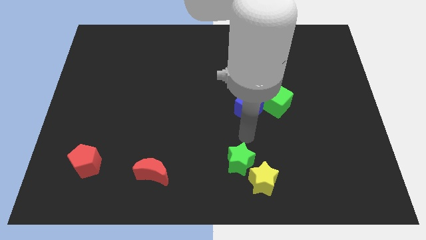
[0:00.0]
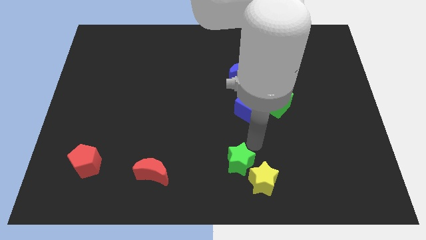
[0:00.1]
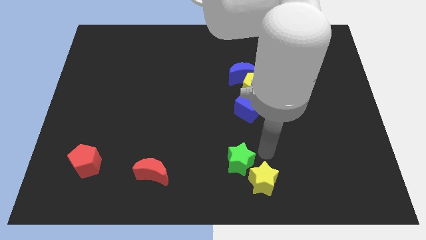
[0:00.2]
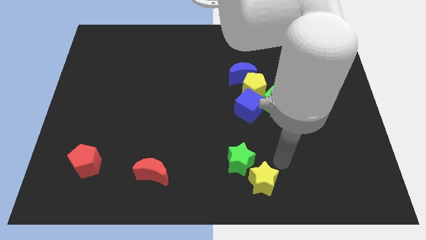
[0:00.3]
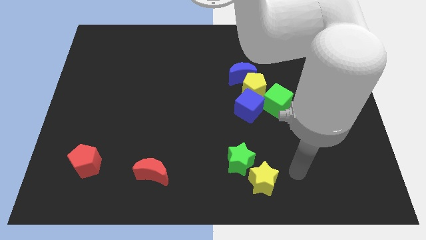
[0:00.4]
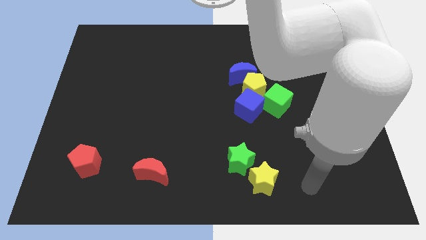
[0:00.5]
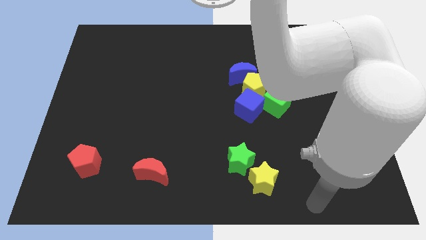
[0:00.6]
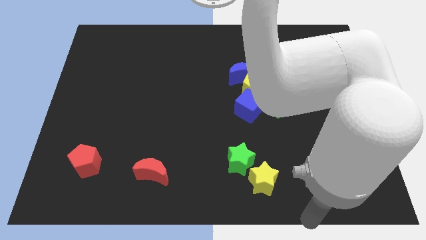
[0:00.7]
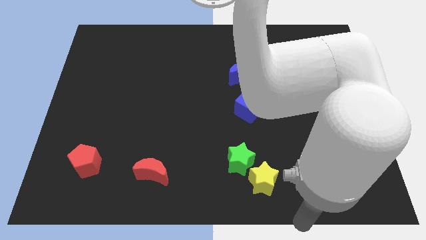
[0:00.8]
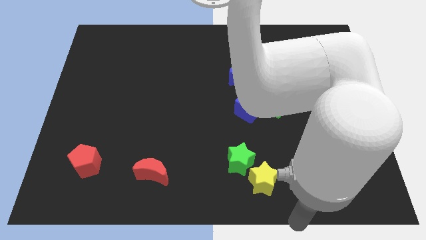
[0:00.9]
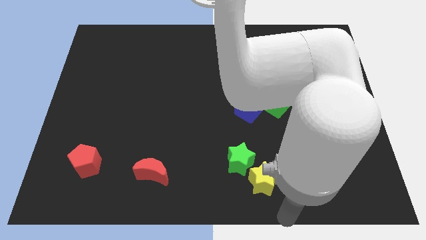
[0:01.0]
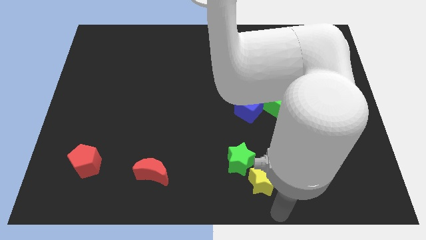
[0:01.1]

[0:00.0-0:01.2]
move your hand to the bottom side

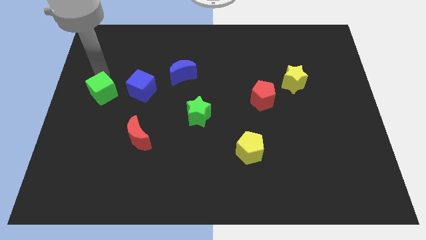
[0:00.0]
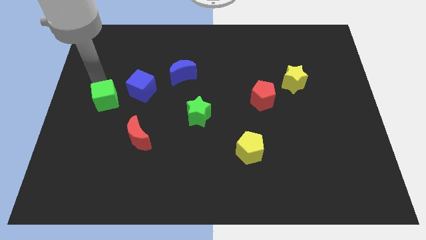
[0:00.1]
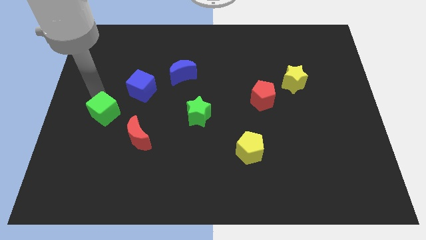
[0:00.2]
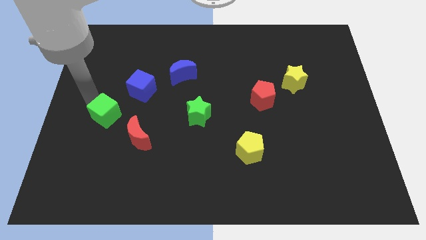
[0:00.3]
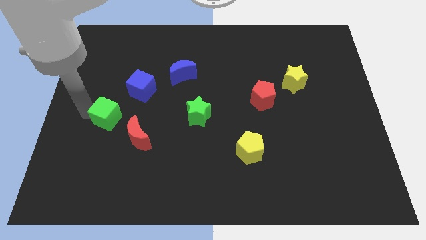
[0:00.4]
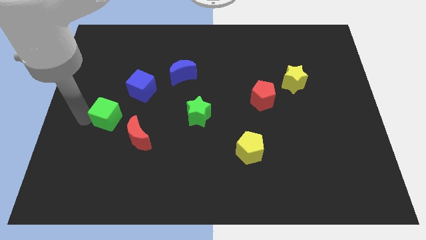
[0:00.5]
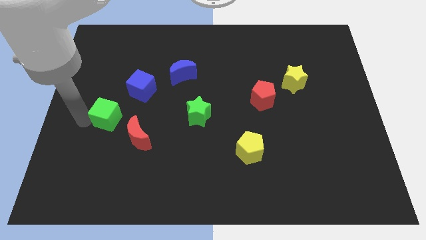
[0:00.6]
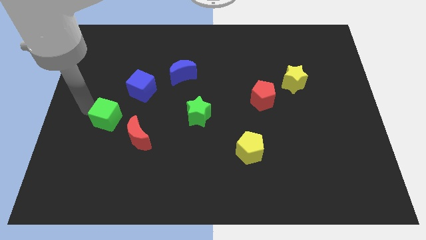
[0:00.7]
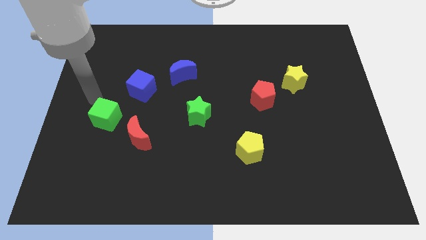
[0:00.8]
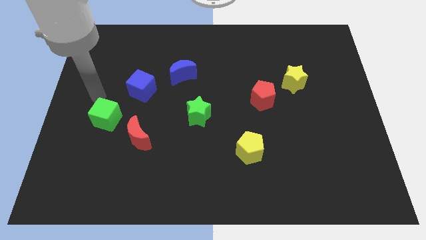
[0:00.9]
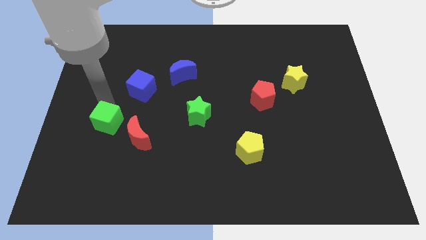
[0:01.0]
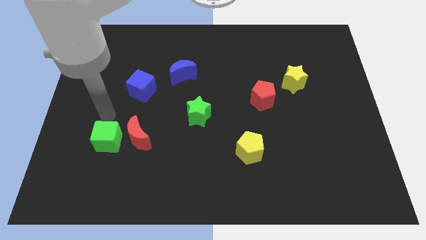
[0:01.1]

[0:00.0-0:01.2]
slide the green cube left of the red moon

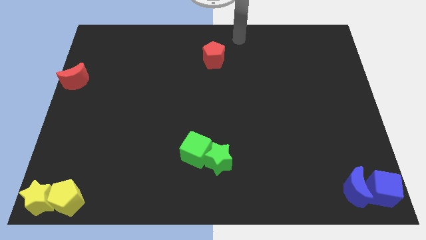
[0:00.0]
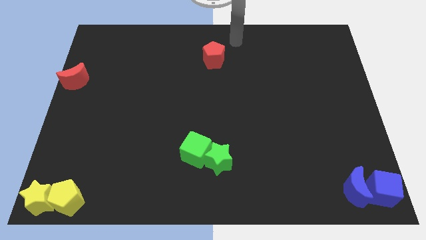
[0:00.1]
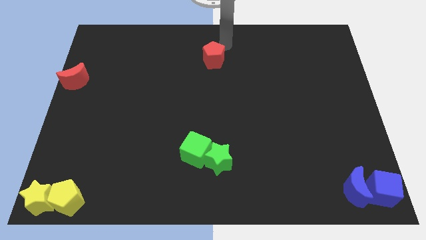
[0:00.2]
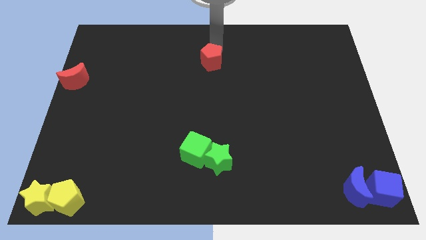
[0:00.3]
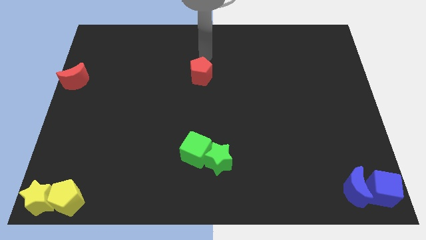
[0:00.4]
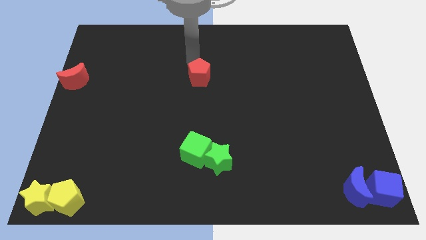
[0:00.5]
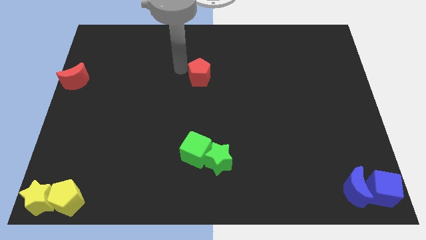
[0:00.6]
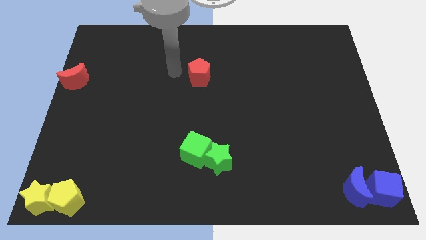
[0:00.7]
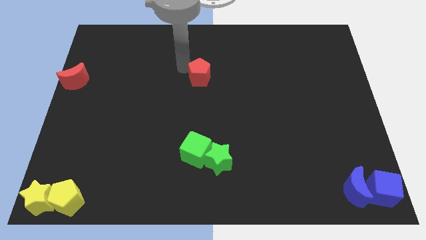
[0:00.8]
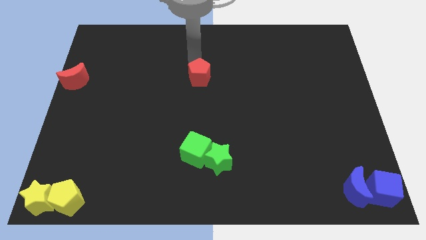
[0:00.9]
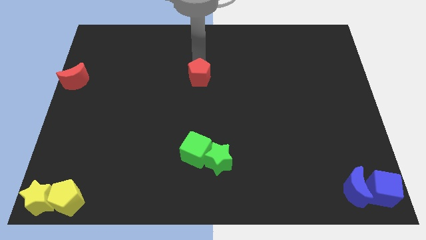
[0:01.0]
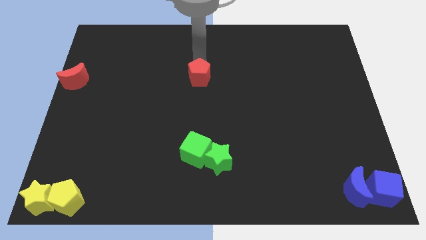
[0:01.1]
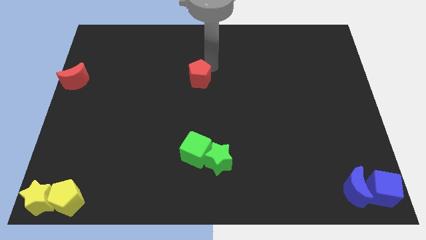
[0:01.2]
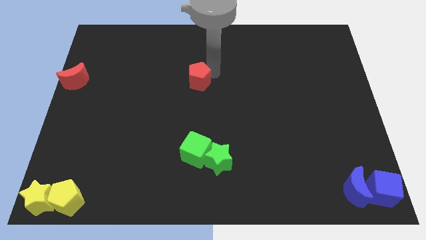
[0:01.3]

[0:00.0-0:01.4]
slightly move the red pentagon to the down

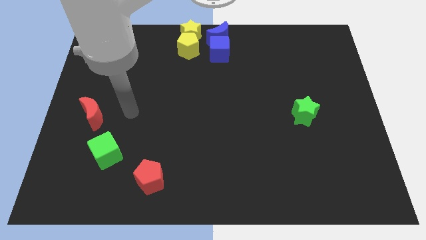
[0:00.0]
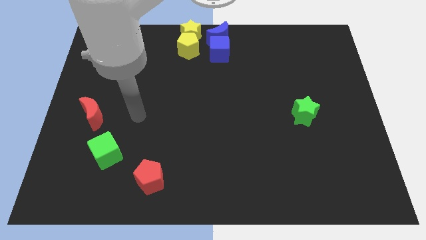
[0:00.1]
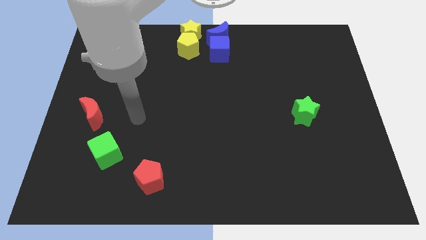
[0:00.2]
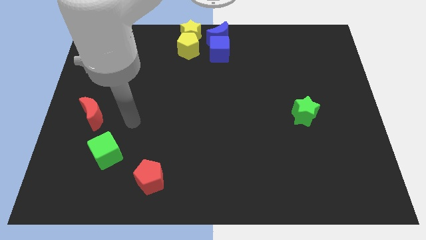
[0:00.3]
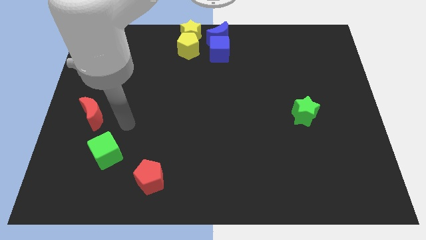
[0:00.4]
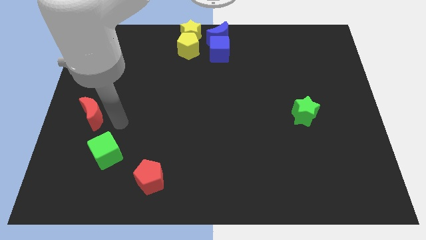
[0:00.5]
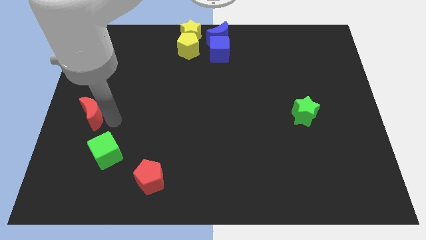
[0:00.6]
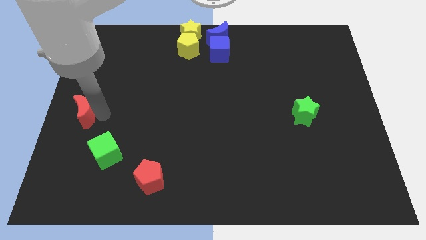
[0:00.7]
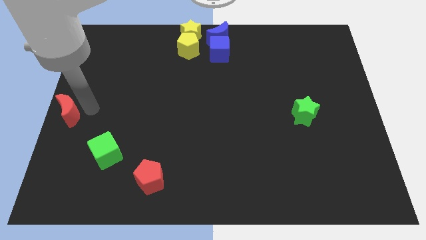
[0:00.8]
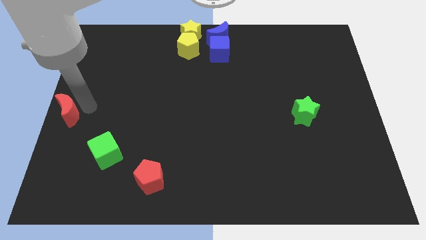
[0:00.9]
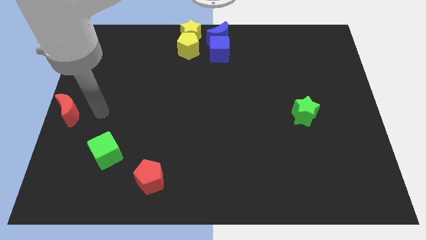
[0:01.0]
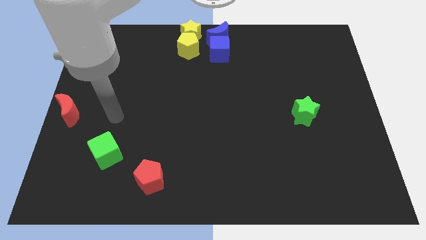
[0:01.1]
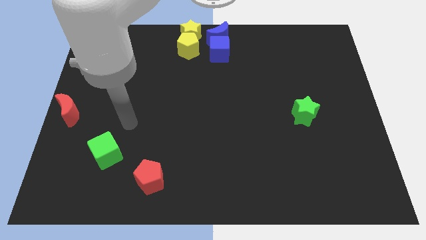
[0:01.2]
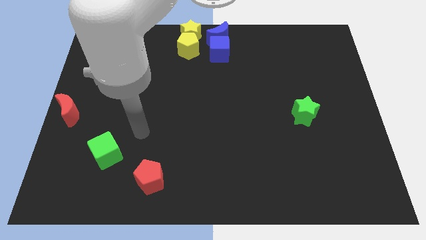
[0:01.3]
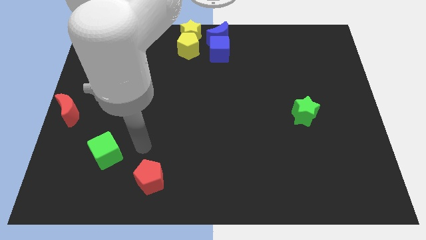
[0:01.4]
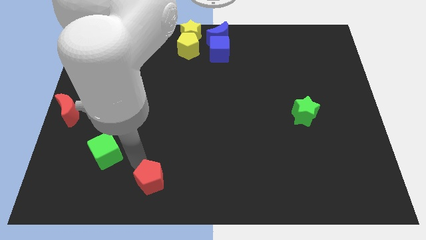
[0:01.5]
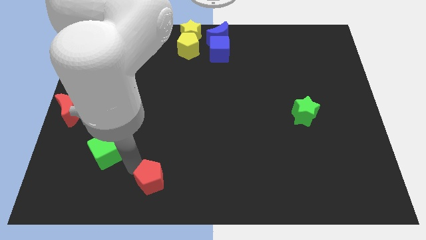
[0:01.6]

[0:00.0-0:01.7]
push the red crescent to the center left

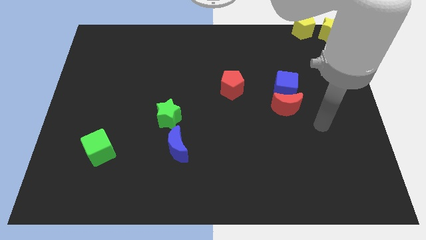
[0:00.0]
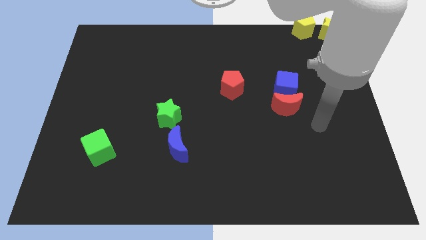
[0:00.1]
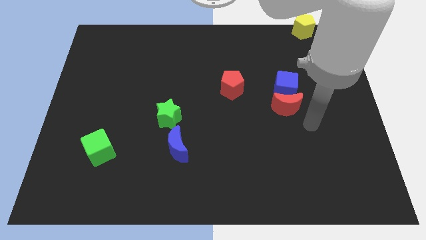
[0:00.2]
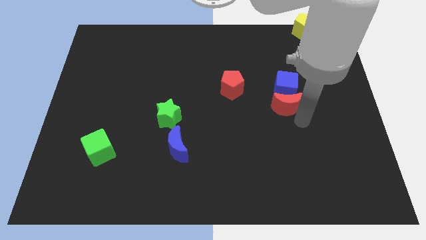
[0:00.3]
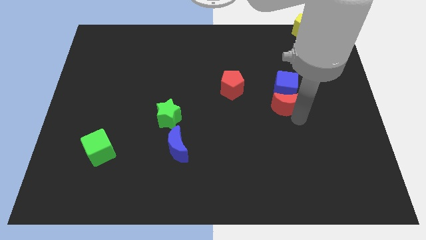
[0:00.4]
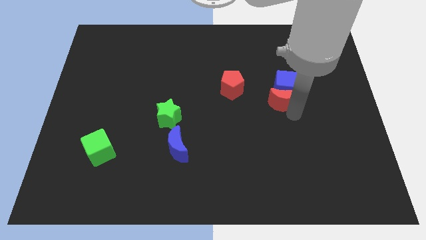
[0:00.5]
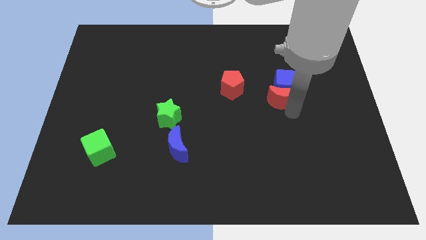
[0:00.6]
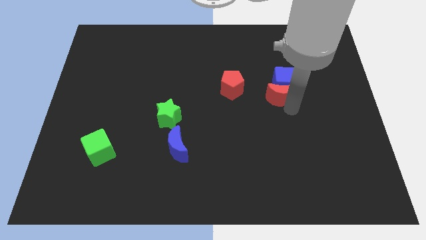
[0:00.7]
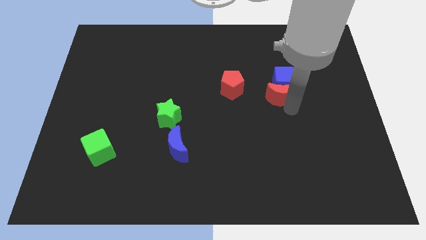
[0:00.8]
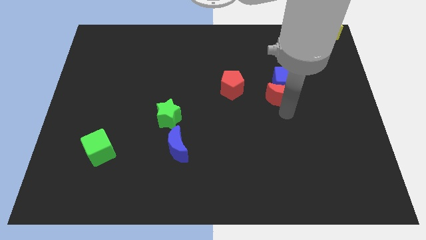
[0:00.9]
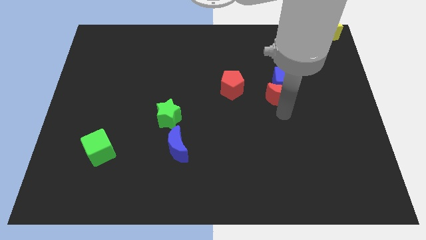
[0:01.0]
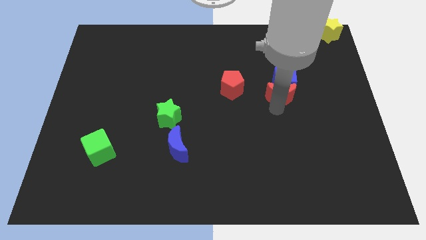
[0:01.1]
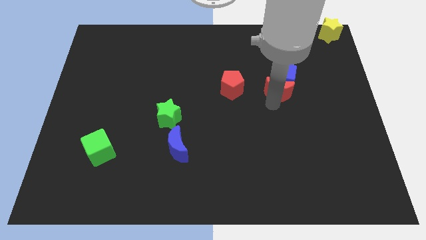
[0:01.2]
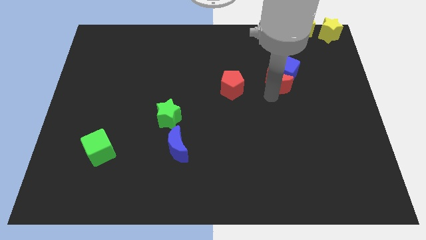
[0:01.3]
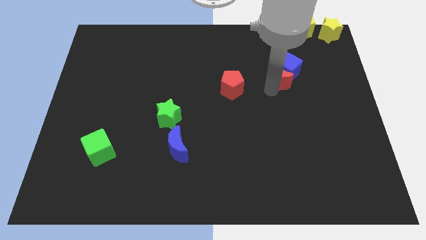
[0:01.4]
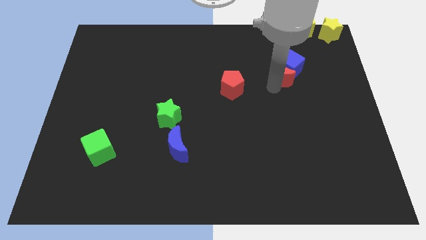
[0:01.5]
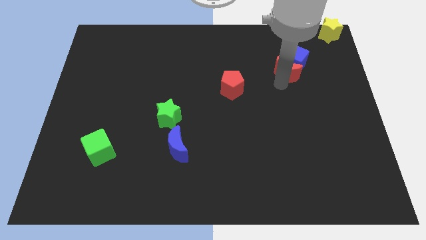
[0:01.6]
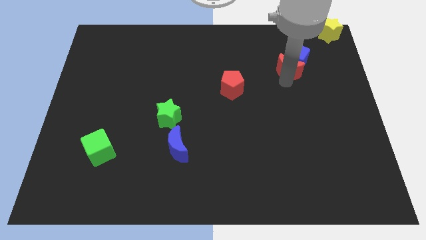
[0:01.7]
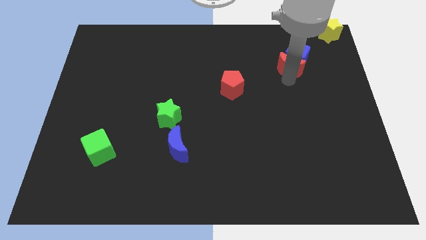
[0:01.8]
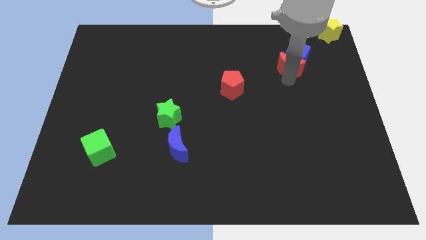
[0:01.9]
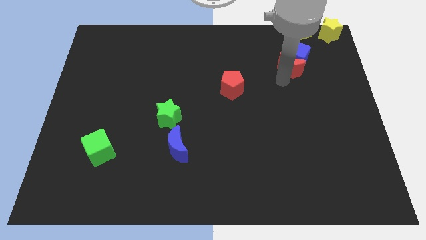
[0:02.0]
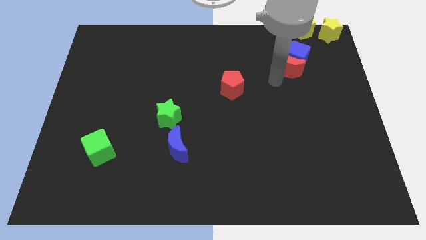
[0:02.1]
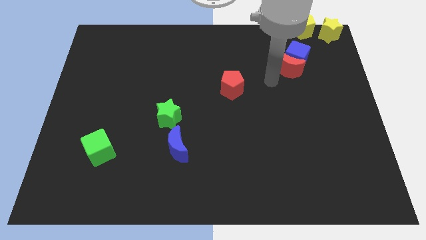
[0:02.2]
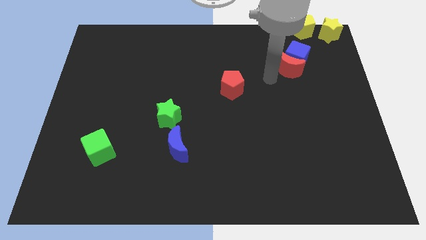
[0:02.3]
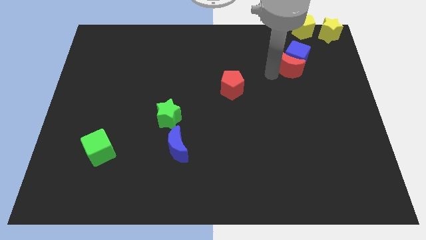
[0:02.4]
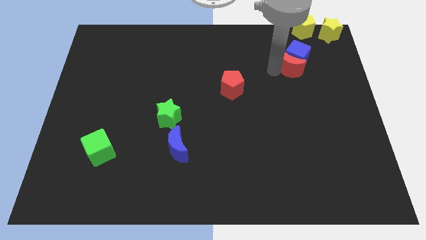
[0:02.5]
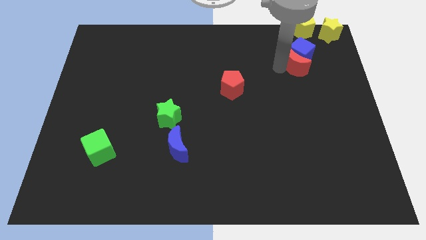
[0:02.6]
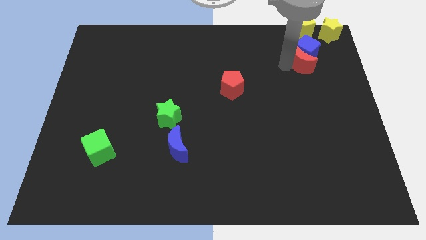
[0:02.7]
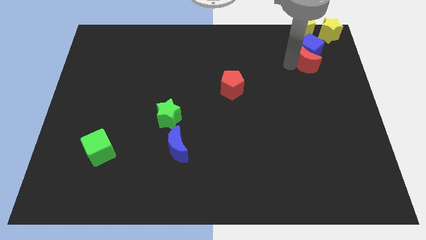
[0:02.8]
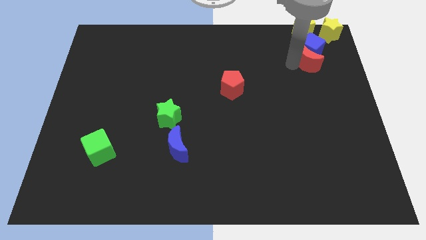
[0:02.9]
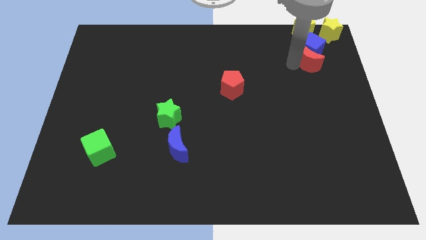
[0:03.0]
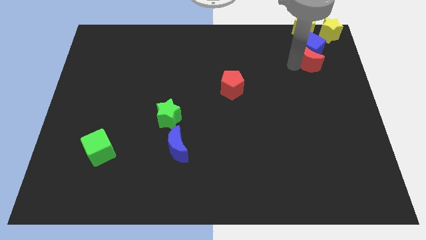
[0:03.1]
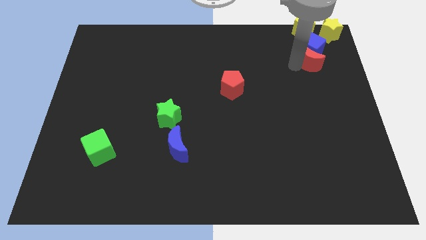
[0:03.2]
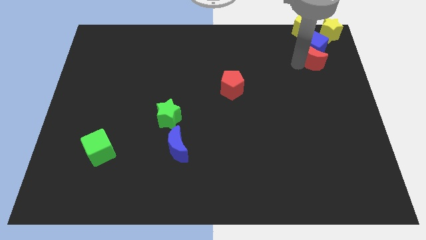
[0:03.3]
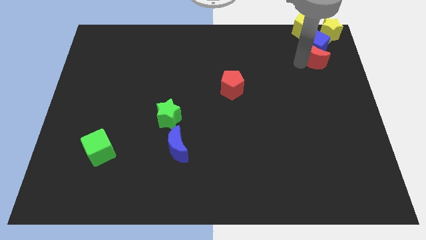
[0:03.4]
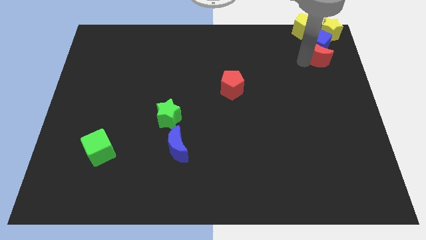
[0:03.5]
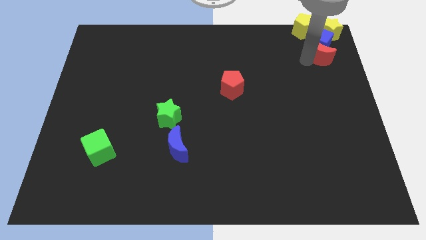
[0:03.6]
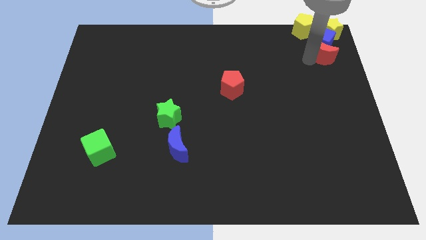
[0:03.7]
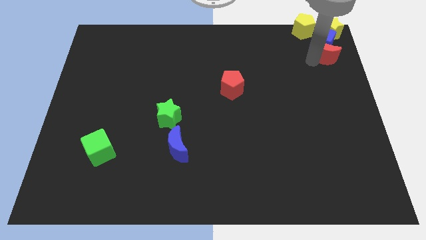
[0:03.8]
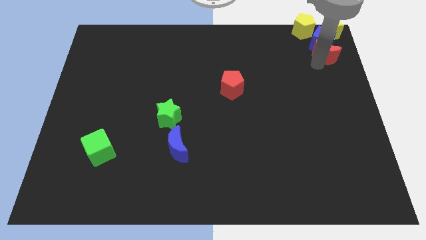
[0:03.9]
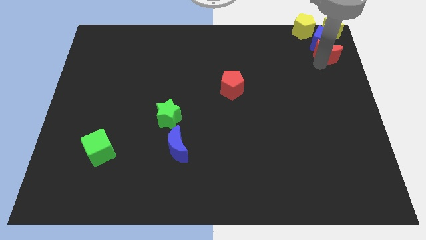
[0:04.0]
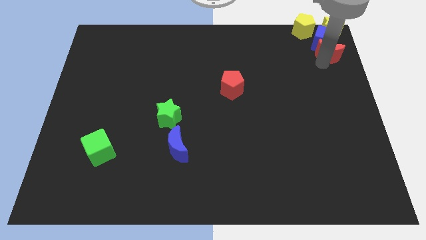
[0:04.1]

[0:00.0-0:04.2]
move the red moon and blue cube to the top right
